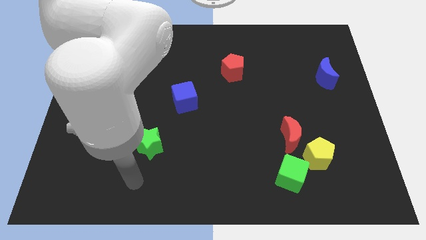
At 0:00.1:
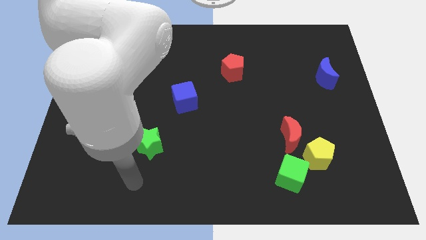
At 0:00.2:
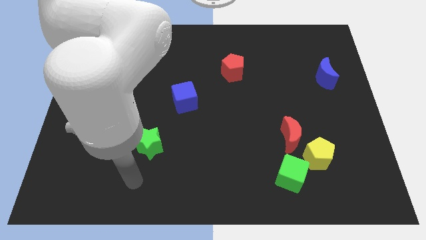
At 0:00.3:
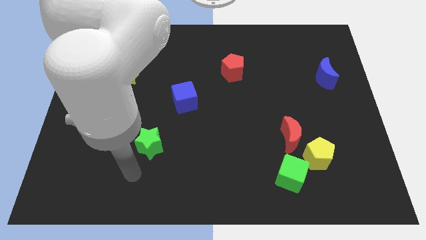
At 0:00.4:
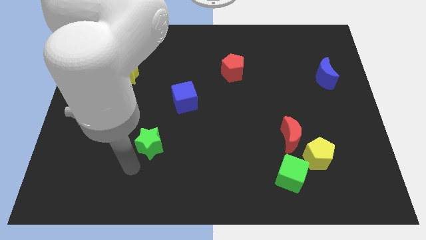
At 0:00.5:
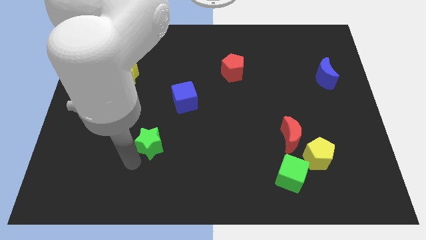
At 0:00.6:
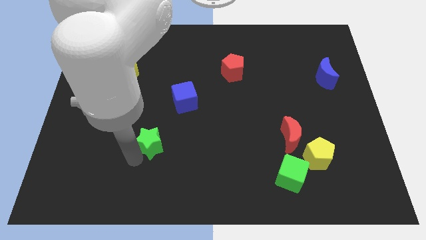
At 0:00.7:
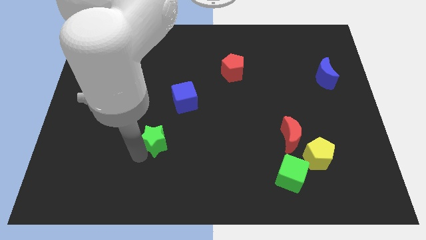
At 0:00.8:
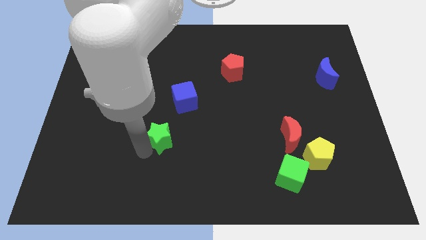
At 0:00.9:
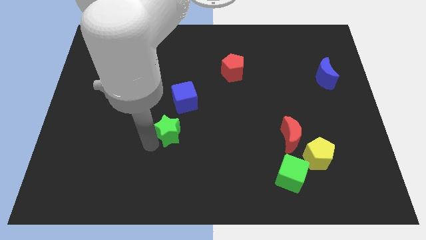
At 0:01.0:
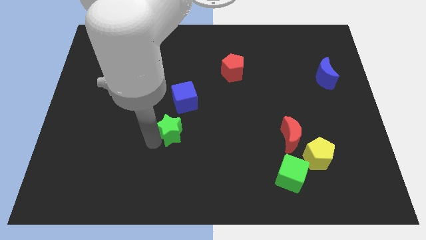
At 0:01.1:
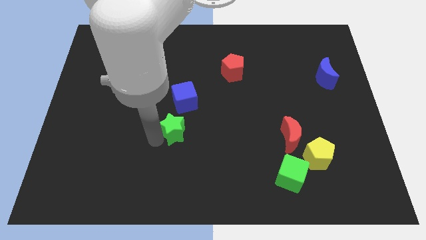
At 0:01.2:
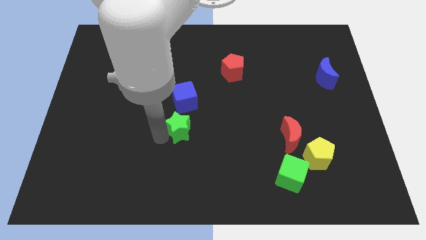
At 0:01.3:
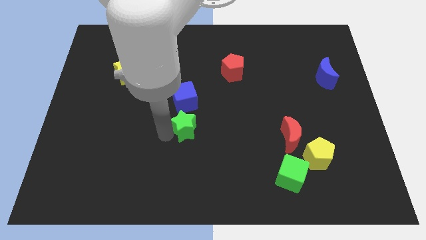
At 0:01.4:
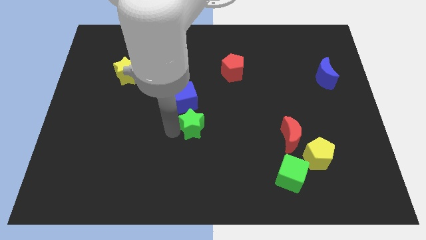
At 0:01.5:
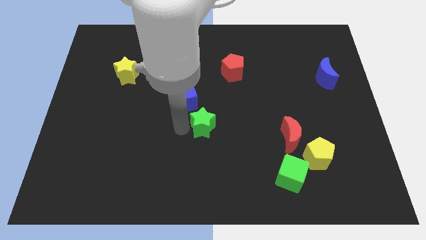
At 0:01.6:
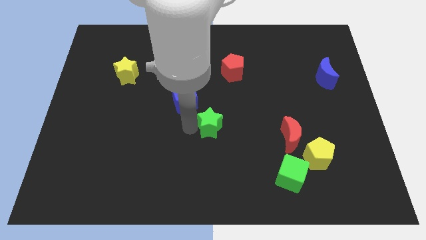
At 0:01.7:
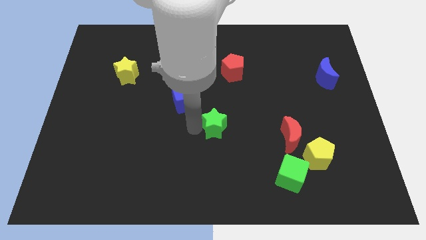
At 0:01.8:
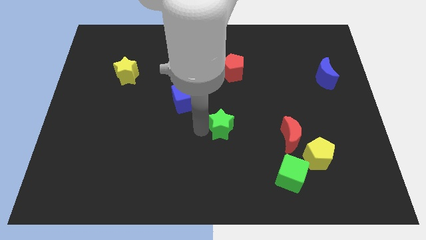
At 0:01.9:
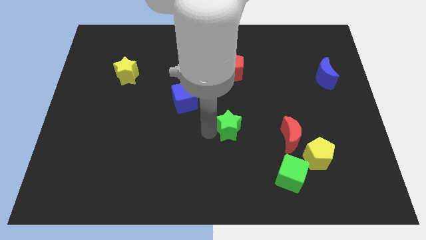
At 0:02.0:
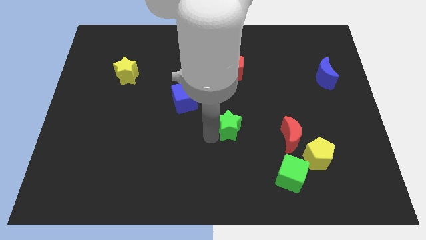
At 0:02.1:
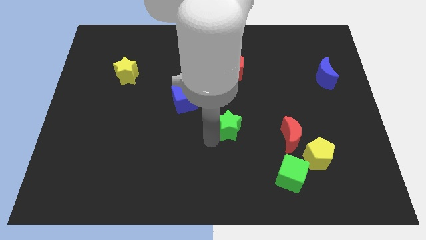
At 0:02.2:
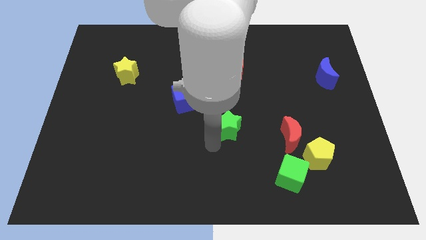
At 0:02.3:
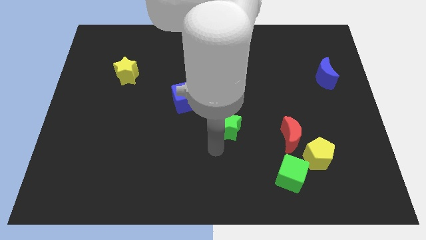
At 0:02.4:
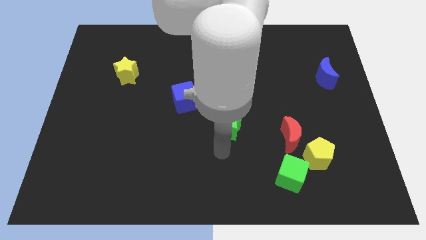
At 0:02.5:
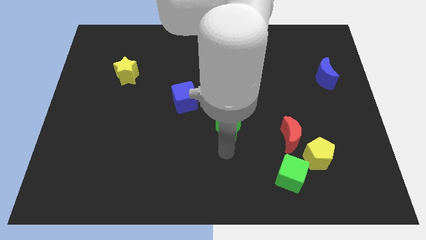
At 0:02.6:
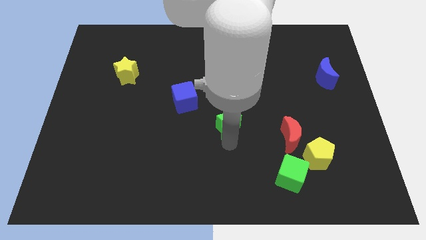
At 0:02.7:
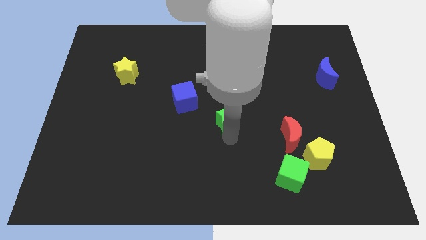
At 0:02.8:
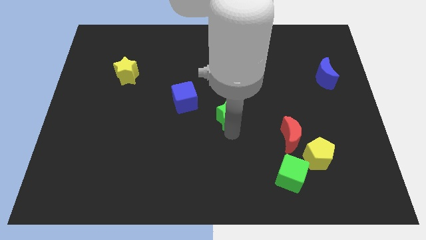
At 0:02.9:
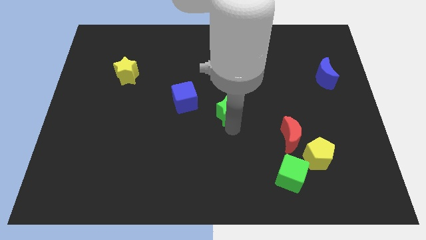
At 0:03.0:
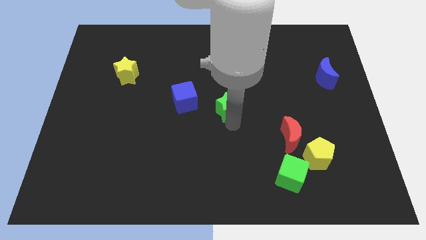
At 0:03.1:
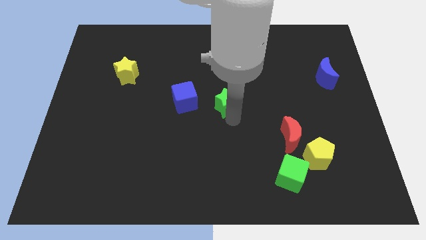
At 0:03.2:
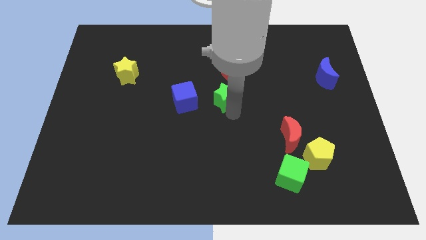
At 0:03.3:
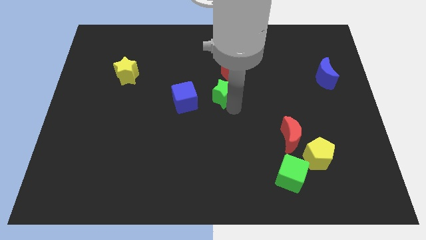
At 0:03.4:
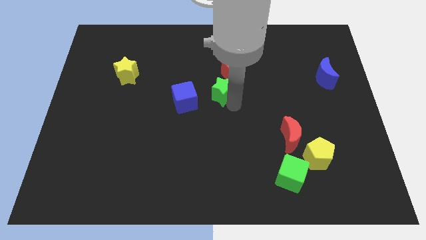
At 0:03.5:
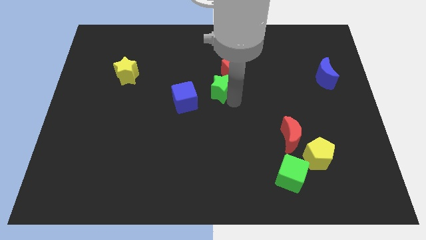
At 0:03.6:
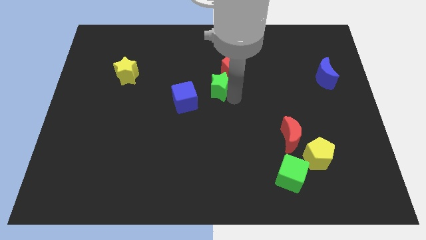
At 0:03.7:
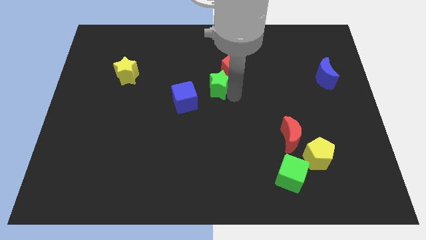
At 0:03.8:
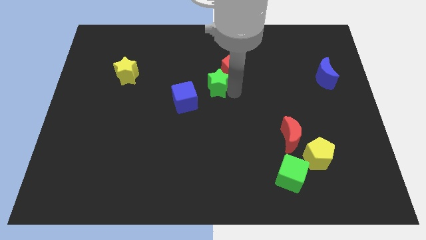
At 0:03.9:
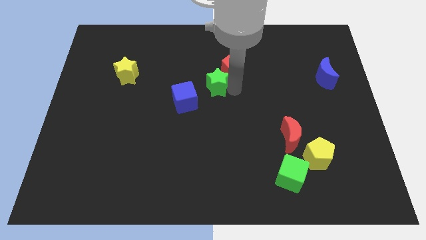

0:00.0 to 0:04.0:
slide the green star close to the red pentagon

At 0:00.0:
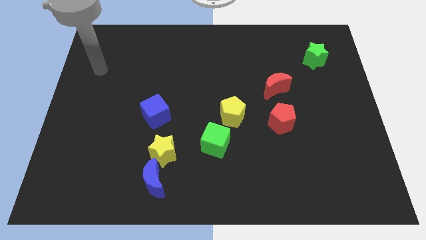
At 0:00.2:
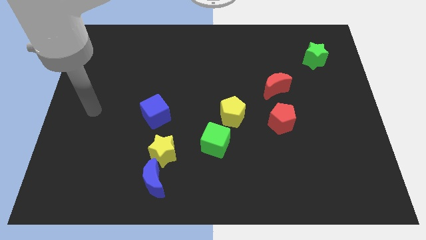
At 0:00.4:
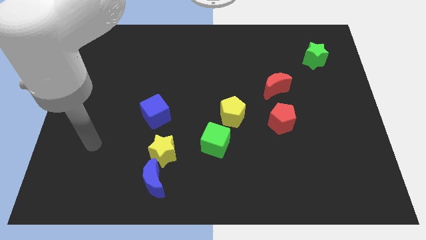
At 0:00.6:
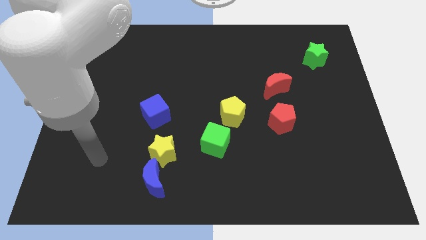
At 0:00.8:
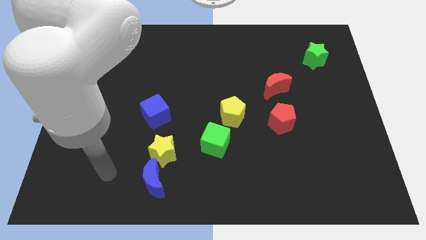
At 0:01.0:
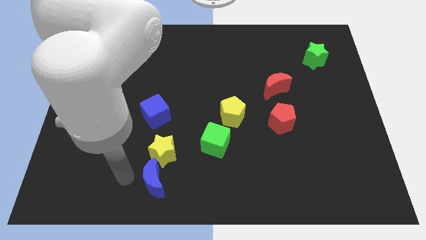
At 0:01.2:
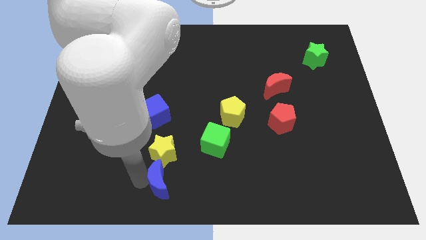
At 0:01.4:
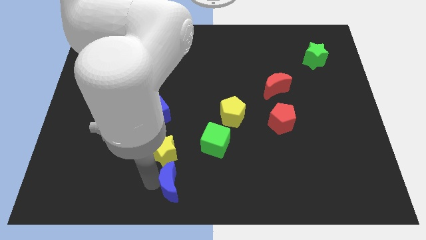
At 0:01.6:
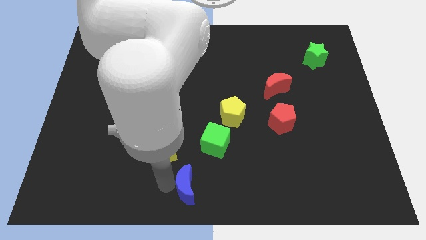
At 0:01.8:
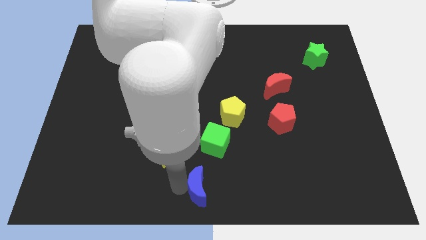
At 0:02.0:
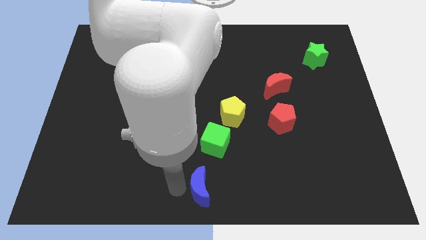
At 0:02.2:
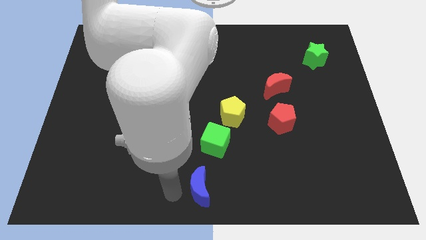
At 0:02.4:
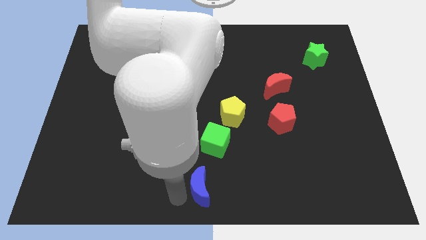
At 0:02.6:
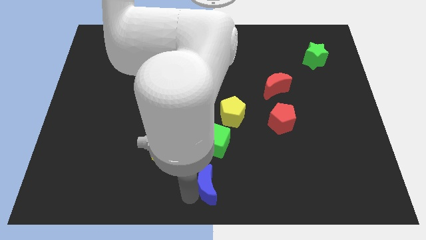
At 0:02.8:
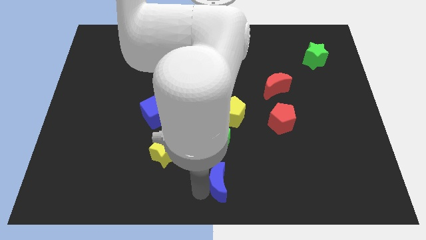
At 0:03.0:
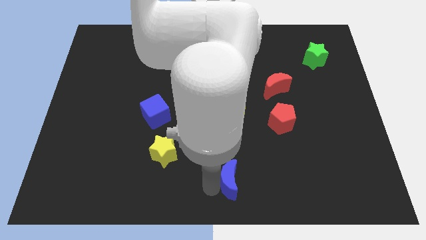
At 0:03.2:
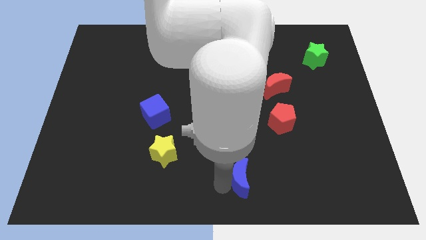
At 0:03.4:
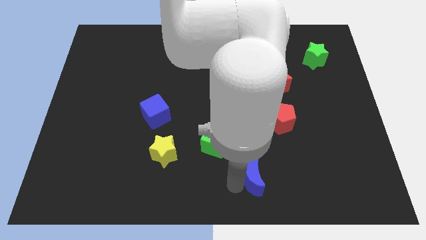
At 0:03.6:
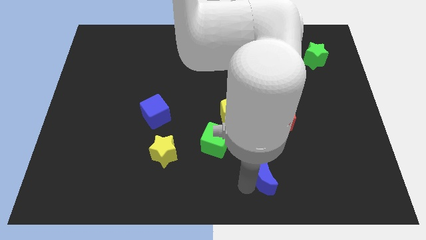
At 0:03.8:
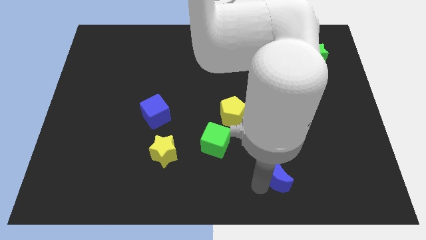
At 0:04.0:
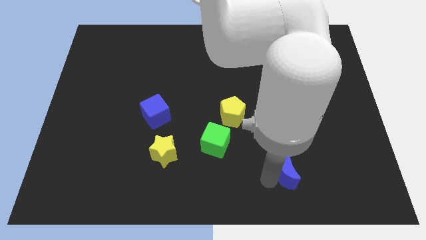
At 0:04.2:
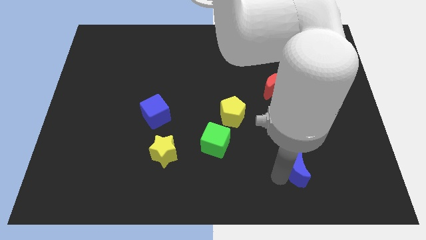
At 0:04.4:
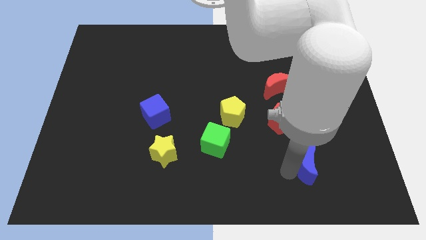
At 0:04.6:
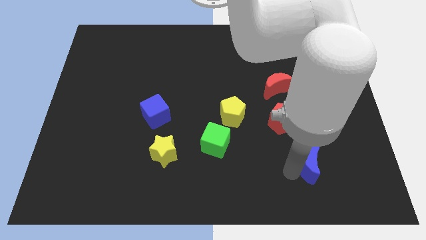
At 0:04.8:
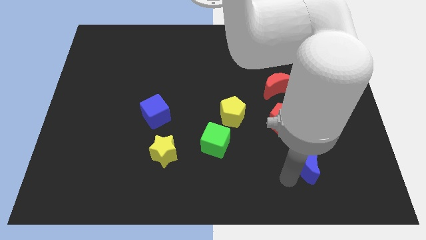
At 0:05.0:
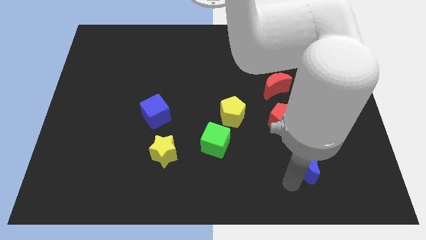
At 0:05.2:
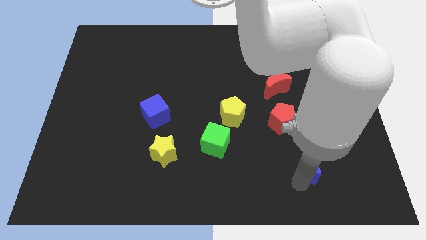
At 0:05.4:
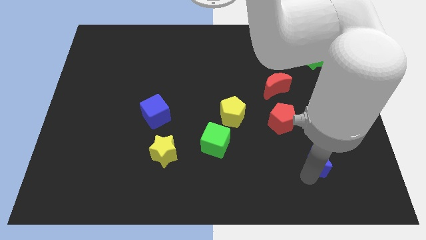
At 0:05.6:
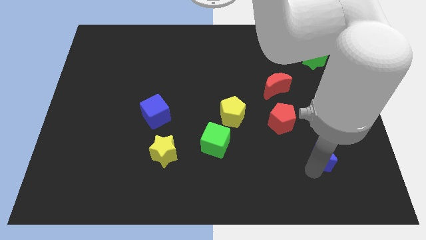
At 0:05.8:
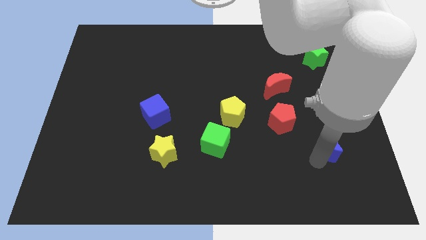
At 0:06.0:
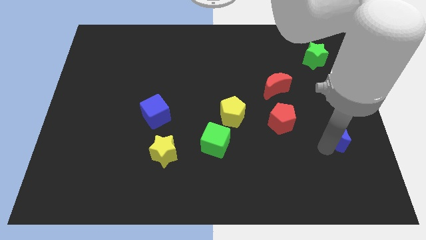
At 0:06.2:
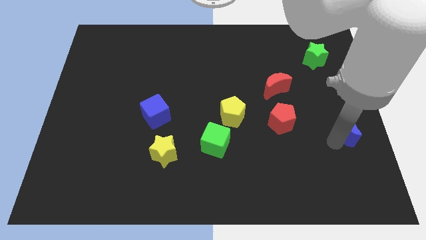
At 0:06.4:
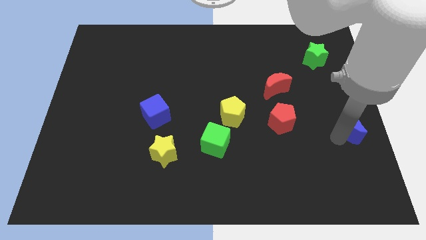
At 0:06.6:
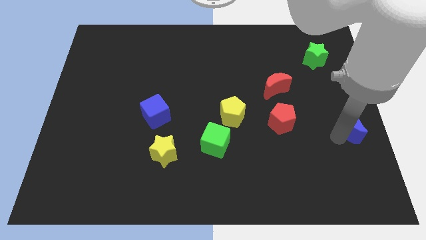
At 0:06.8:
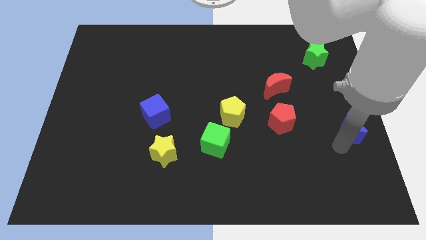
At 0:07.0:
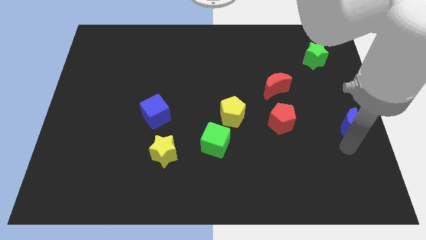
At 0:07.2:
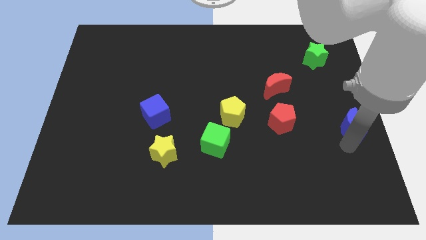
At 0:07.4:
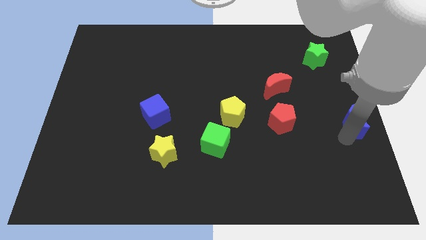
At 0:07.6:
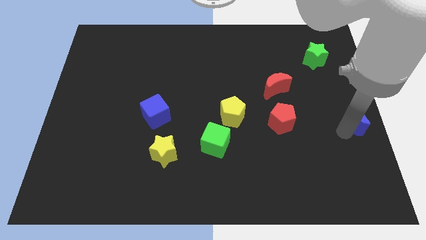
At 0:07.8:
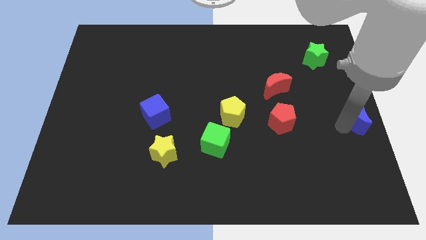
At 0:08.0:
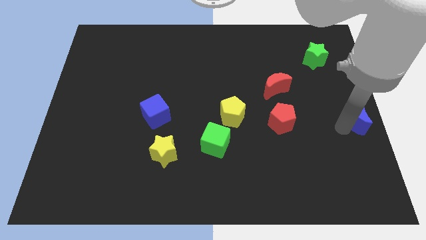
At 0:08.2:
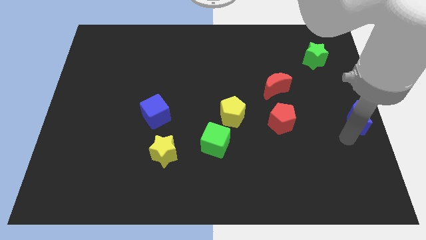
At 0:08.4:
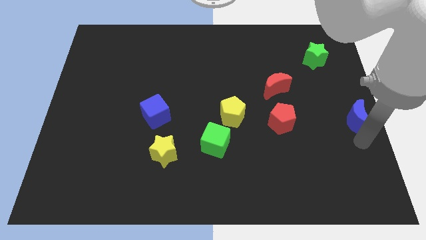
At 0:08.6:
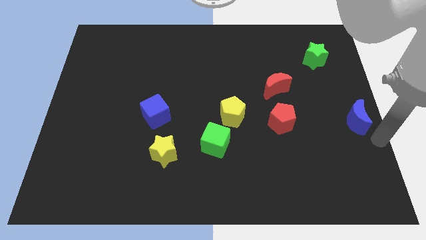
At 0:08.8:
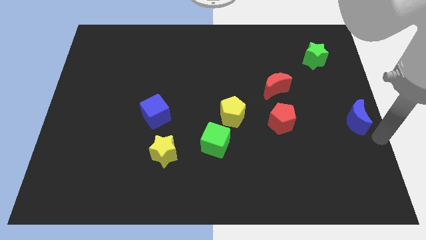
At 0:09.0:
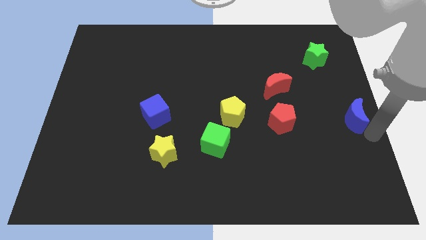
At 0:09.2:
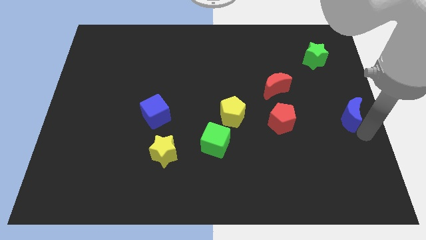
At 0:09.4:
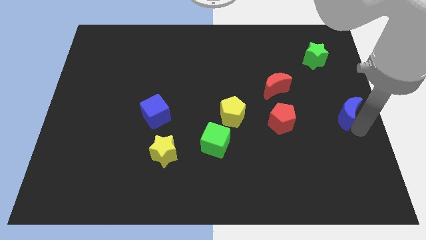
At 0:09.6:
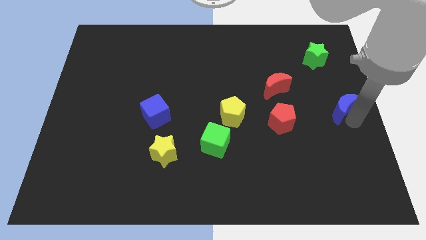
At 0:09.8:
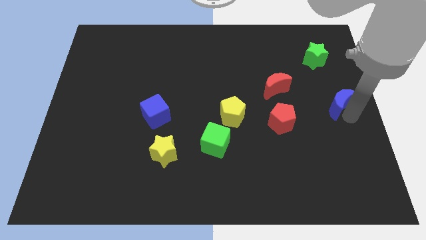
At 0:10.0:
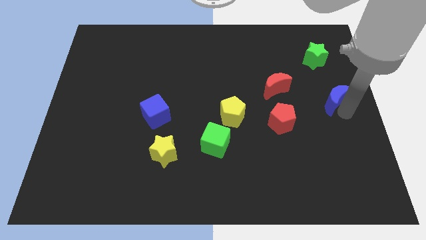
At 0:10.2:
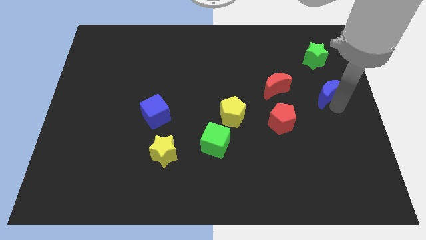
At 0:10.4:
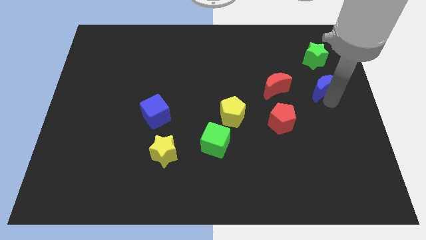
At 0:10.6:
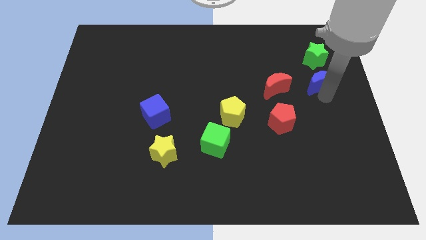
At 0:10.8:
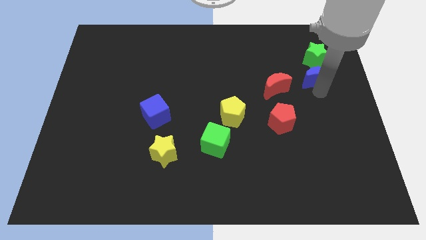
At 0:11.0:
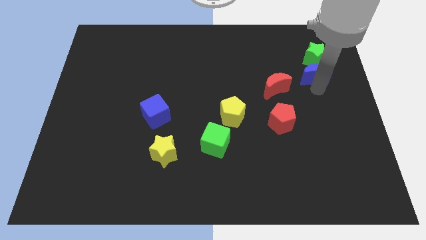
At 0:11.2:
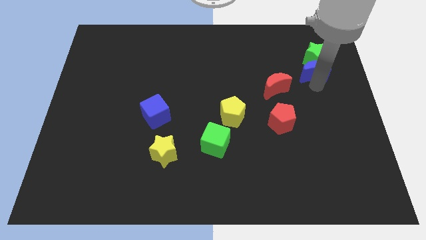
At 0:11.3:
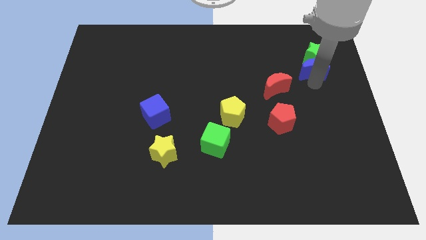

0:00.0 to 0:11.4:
move the blue moon next to the green star
